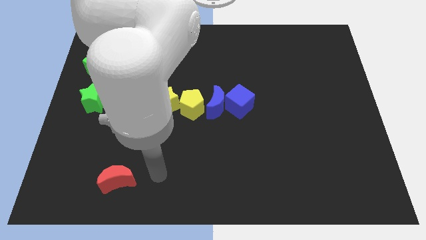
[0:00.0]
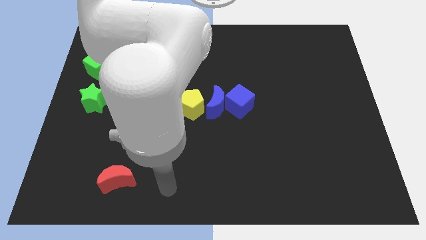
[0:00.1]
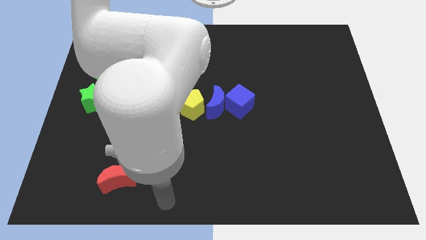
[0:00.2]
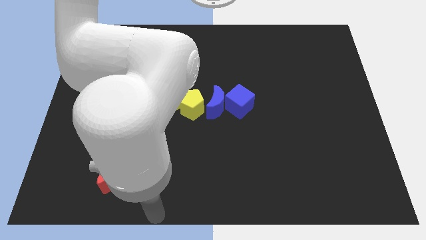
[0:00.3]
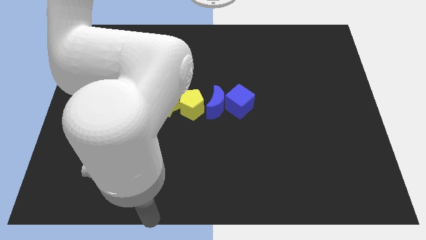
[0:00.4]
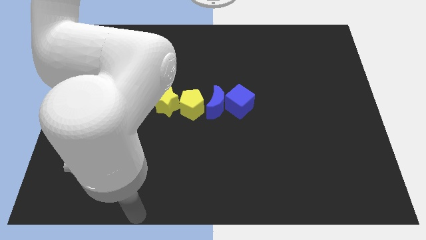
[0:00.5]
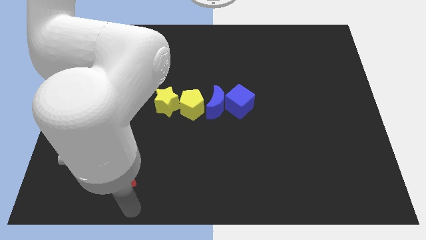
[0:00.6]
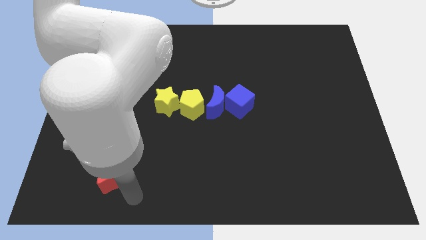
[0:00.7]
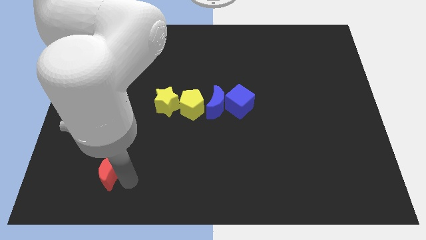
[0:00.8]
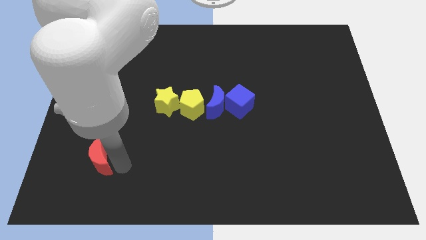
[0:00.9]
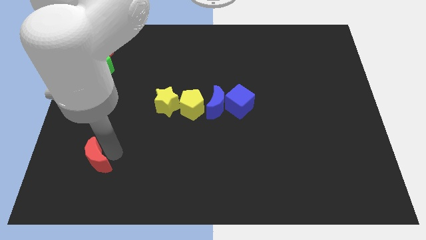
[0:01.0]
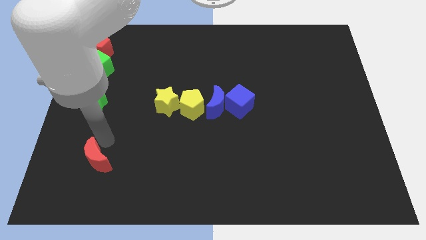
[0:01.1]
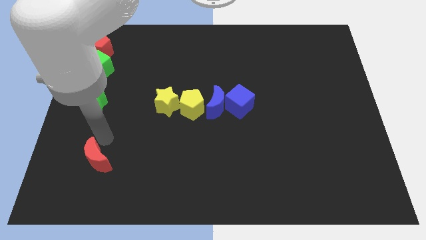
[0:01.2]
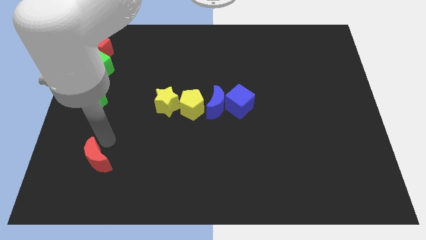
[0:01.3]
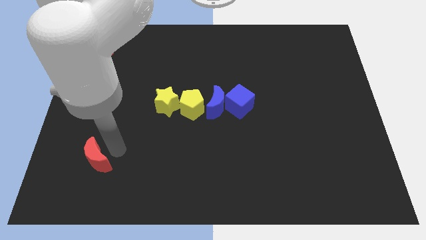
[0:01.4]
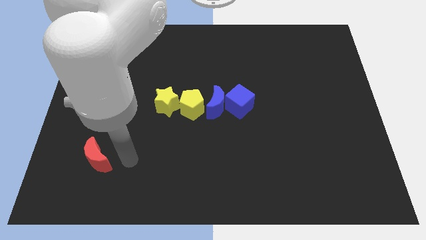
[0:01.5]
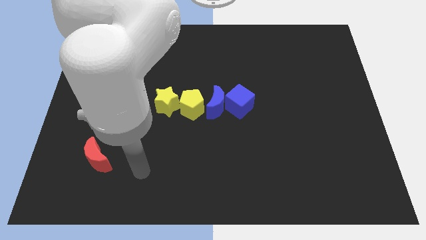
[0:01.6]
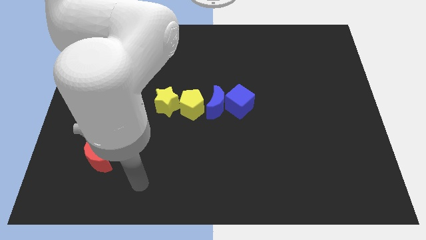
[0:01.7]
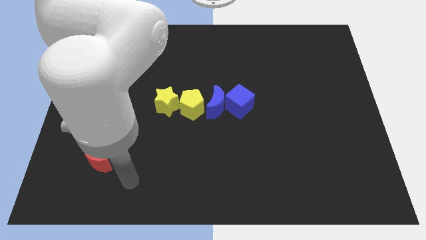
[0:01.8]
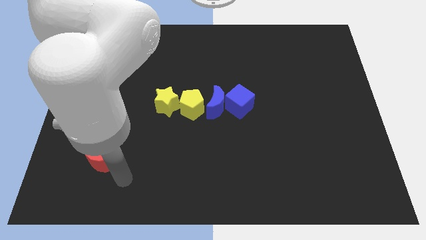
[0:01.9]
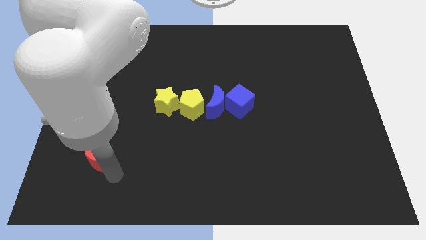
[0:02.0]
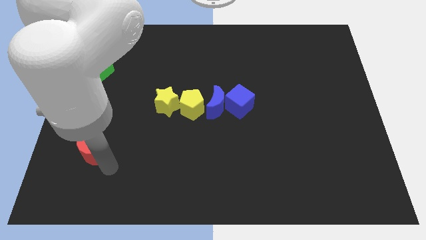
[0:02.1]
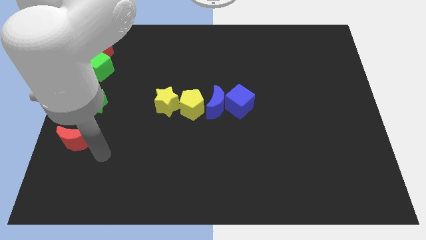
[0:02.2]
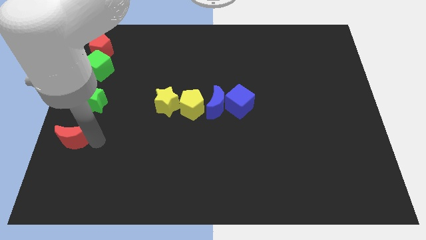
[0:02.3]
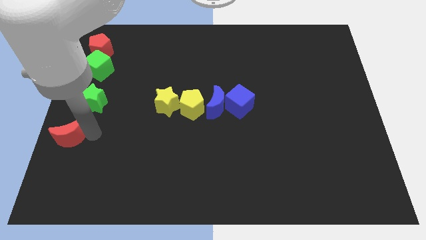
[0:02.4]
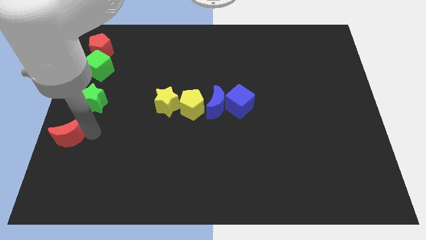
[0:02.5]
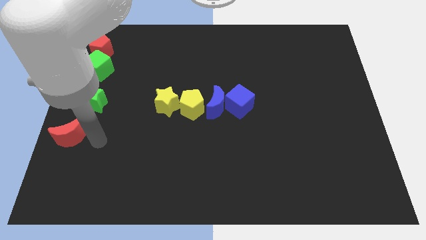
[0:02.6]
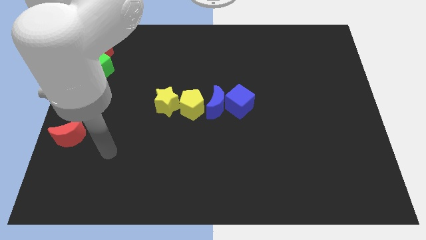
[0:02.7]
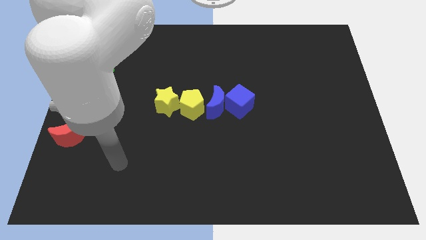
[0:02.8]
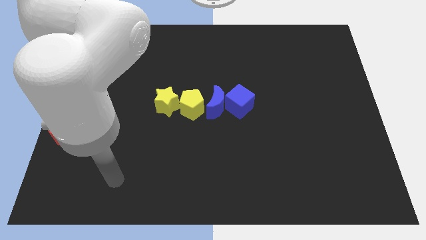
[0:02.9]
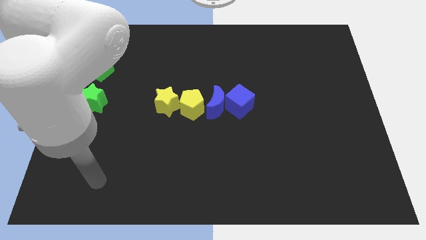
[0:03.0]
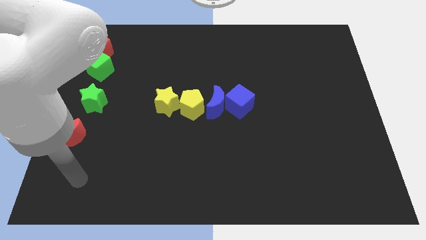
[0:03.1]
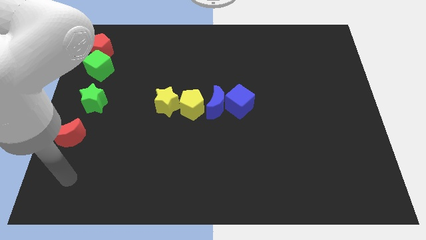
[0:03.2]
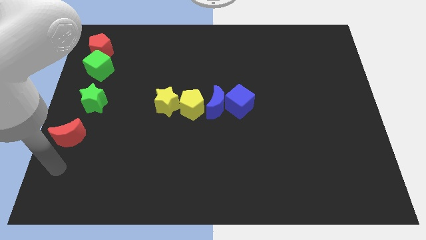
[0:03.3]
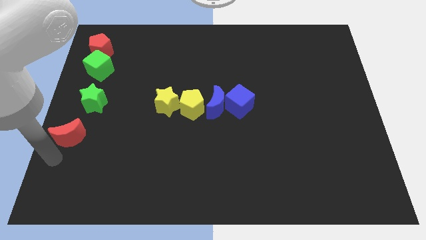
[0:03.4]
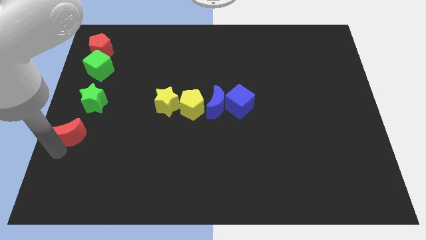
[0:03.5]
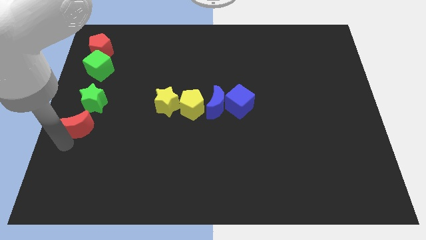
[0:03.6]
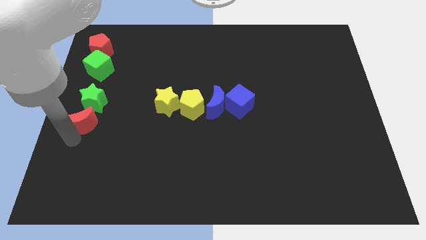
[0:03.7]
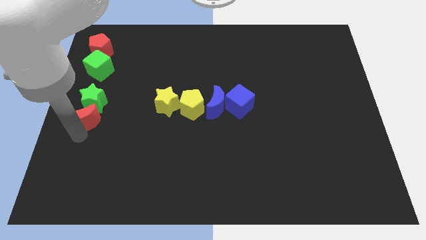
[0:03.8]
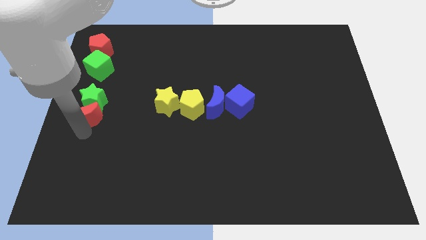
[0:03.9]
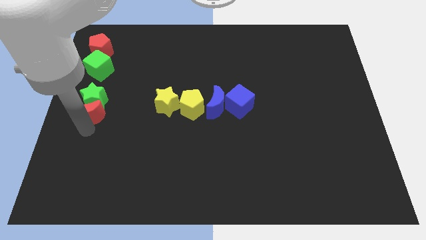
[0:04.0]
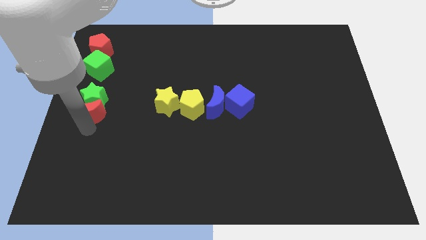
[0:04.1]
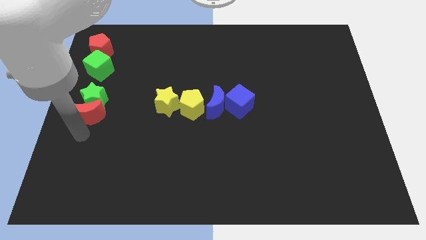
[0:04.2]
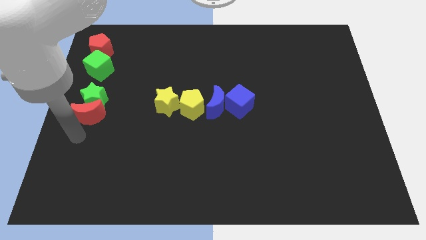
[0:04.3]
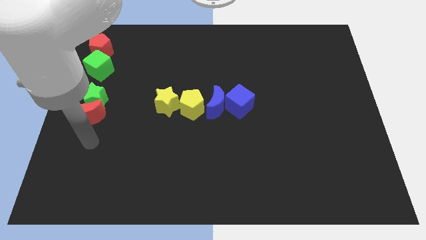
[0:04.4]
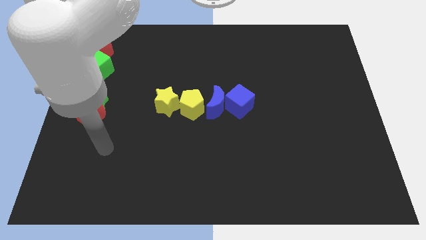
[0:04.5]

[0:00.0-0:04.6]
push the bottom left red moon toward center left

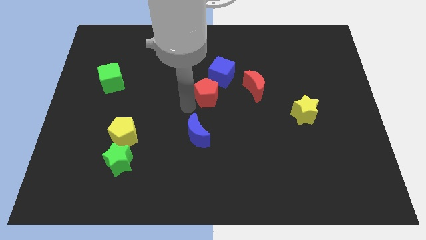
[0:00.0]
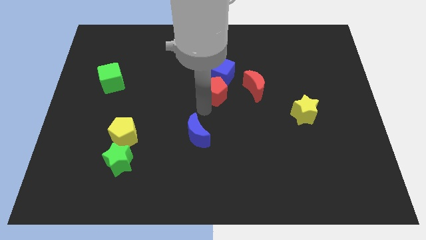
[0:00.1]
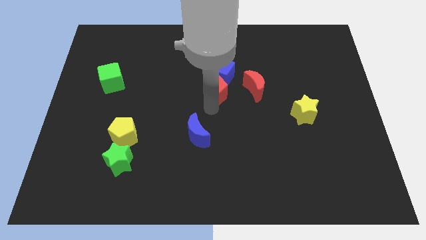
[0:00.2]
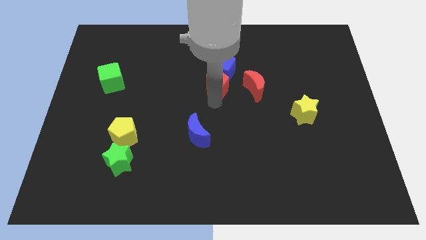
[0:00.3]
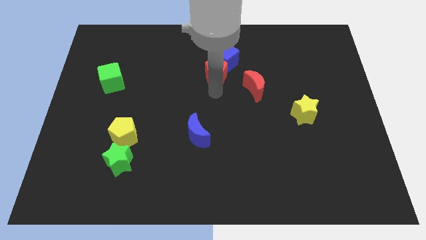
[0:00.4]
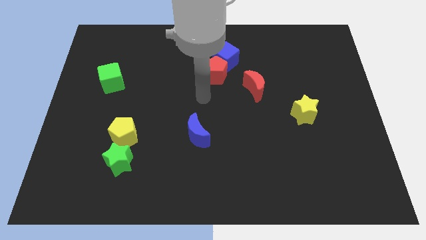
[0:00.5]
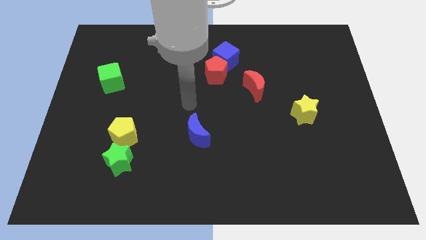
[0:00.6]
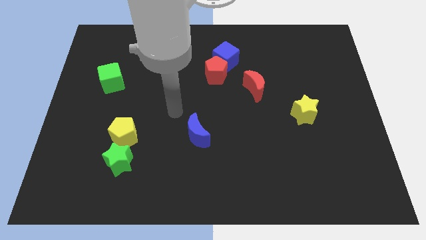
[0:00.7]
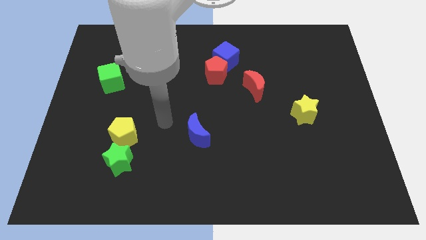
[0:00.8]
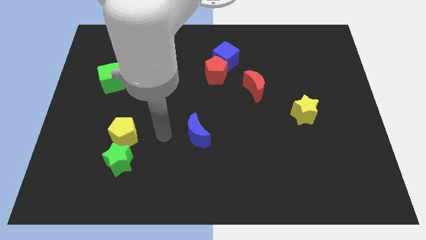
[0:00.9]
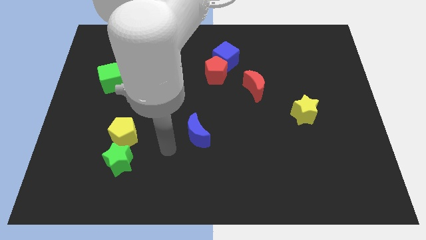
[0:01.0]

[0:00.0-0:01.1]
move the red pentagon near to the blue cube

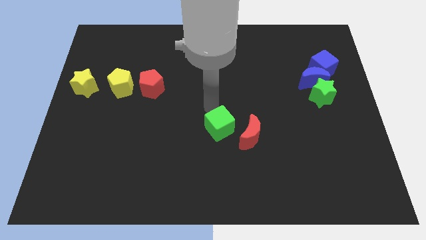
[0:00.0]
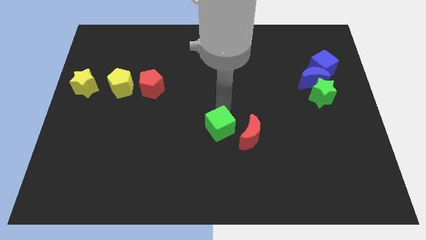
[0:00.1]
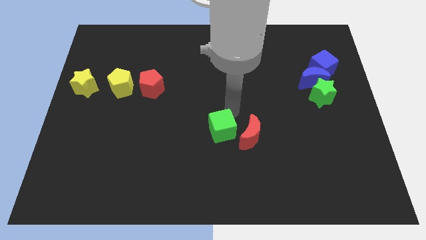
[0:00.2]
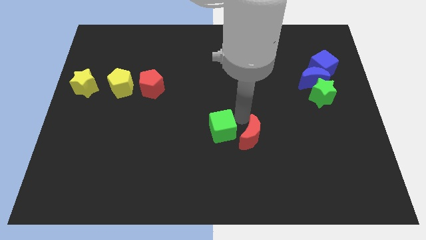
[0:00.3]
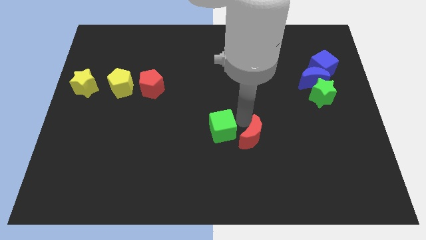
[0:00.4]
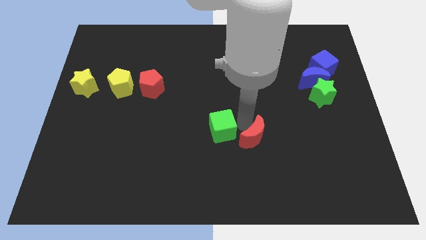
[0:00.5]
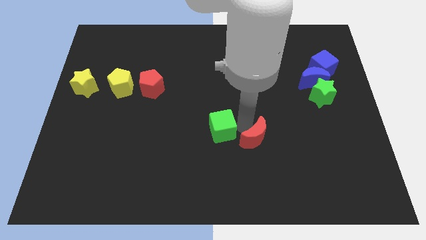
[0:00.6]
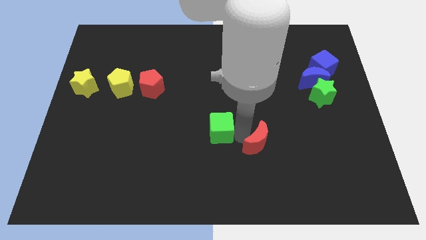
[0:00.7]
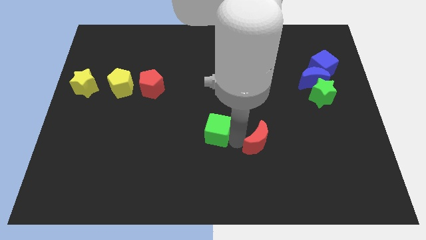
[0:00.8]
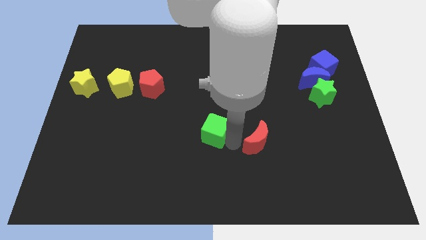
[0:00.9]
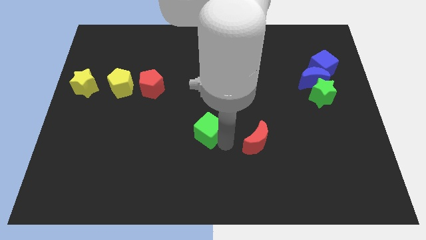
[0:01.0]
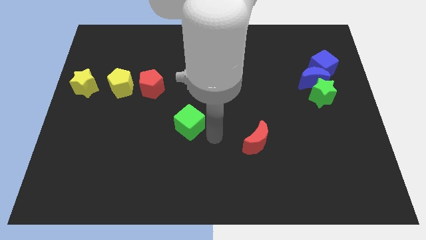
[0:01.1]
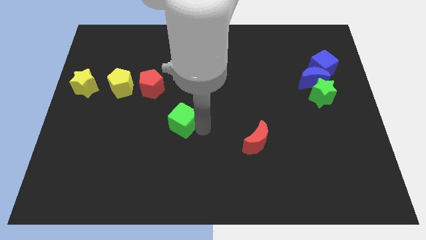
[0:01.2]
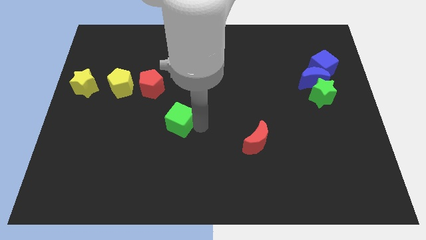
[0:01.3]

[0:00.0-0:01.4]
separate the green cube and the red crescent

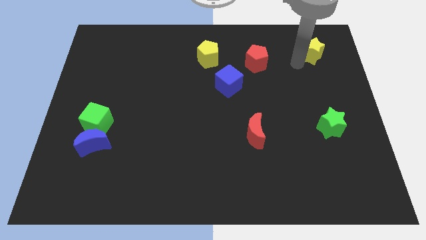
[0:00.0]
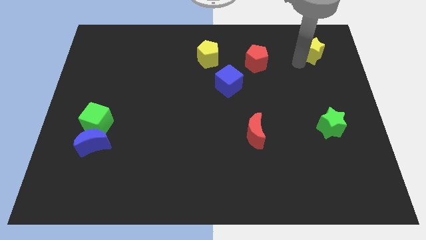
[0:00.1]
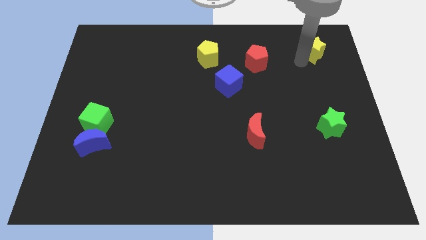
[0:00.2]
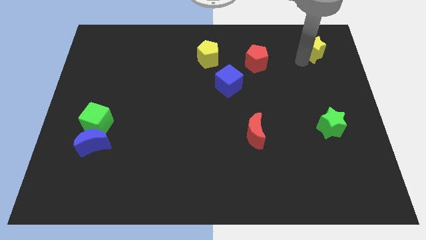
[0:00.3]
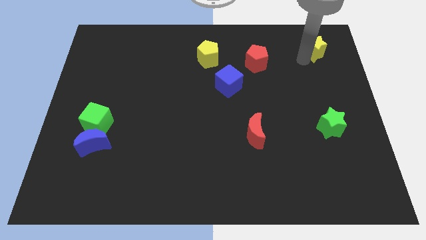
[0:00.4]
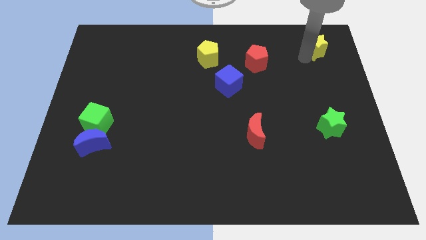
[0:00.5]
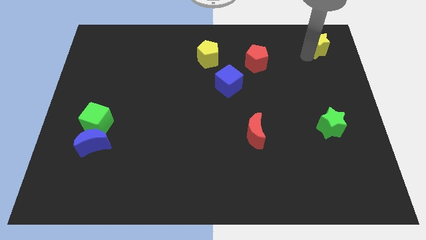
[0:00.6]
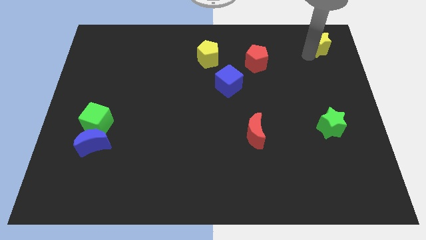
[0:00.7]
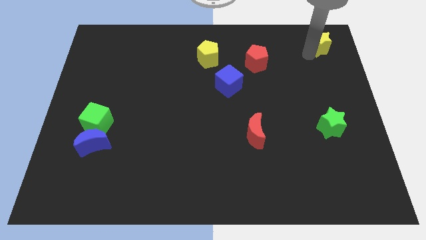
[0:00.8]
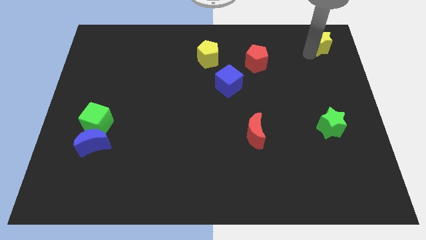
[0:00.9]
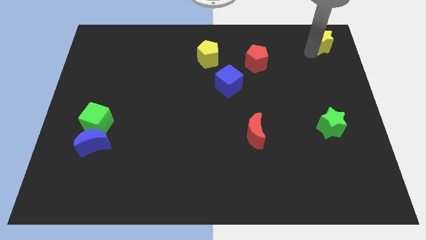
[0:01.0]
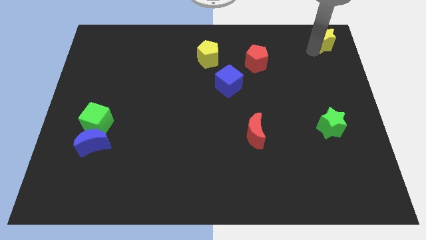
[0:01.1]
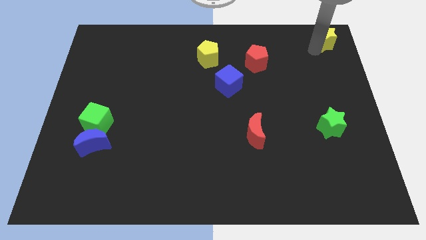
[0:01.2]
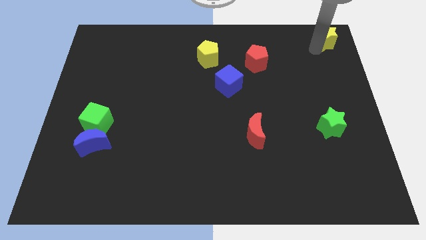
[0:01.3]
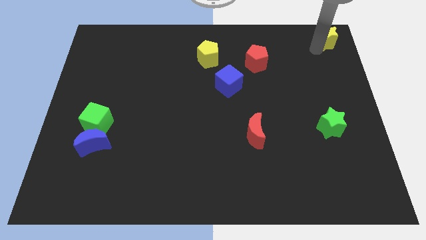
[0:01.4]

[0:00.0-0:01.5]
push the yellow star towards the top right corner of the board

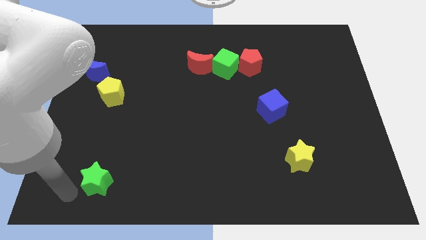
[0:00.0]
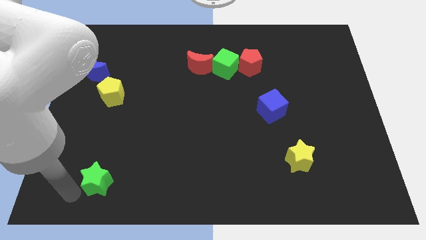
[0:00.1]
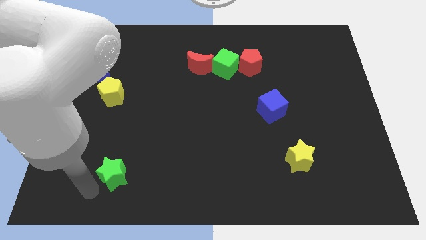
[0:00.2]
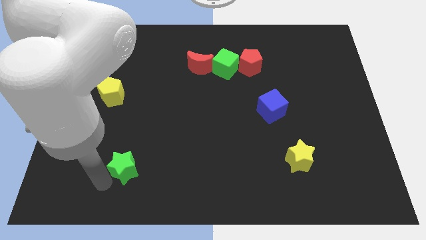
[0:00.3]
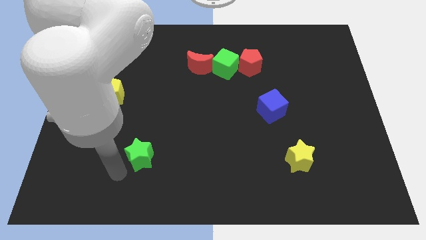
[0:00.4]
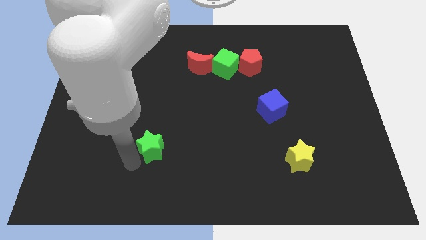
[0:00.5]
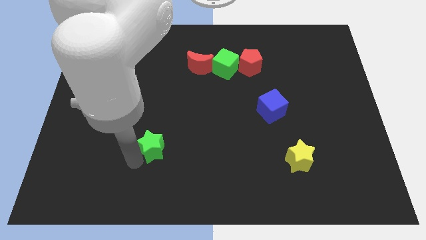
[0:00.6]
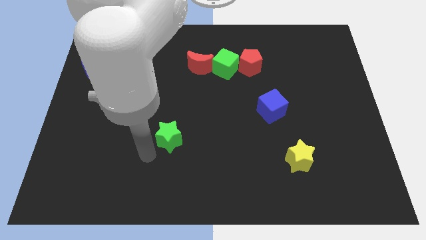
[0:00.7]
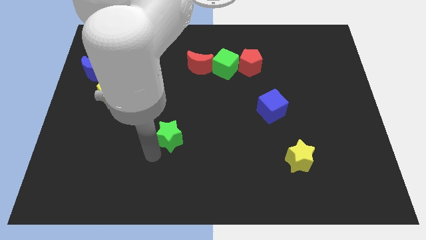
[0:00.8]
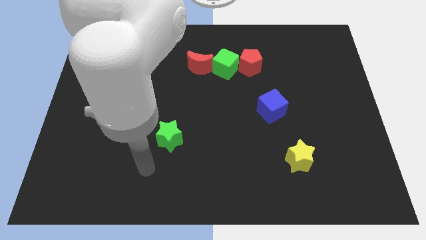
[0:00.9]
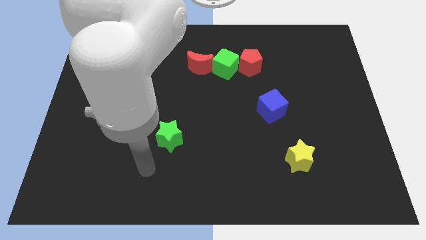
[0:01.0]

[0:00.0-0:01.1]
push the green star towards the top
